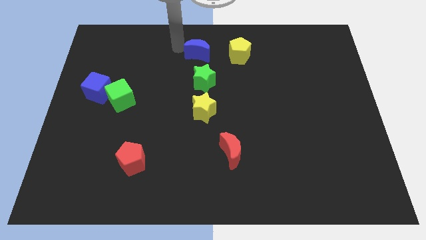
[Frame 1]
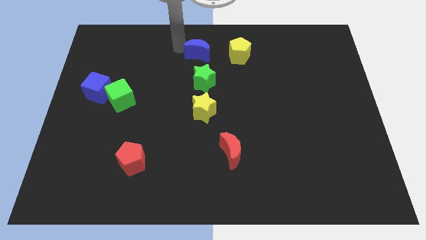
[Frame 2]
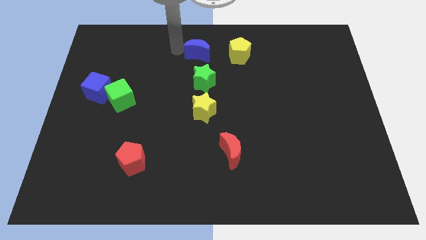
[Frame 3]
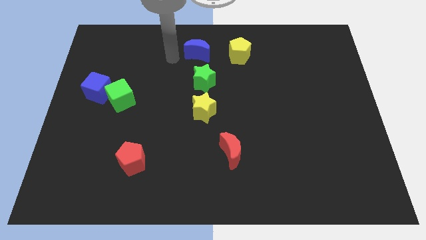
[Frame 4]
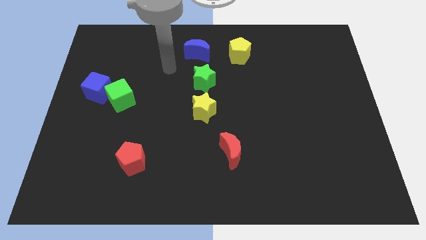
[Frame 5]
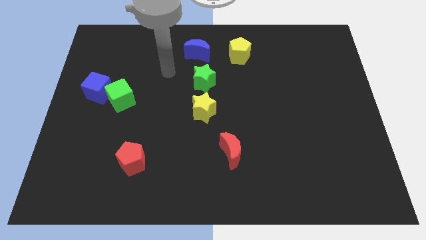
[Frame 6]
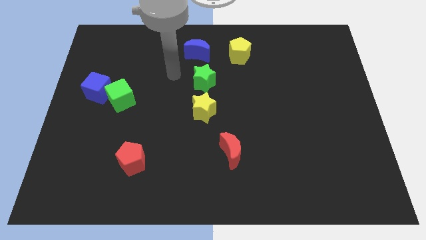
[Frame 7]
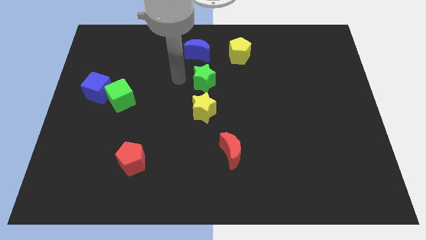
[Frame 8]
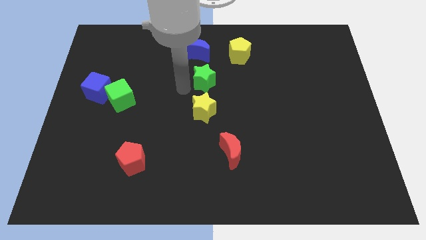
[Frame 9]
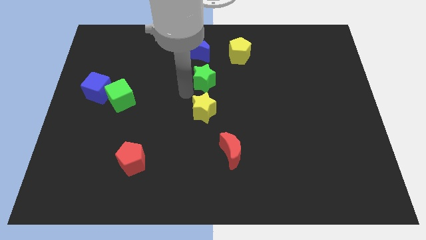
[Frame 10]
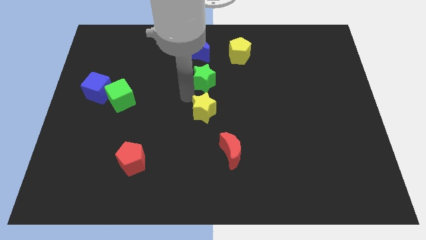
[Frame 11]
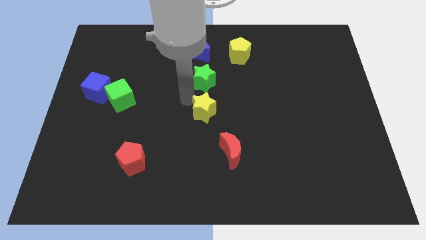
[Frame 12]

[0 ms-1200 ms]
move your arm to the top left of yellow star

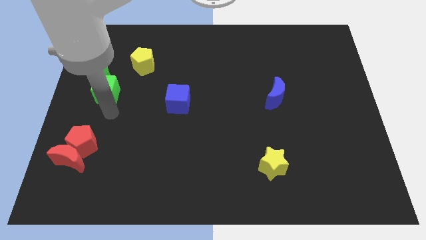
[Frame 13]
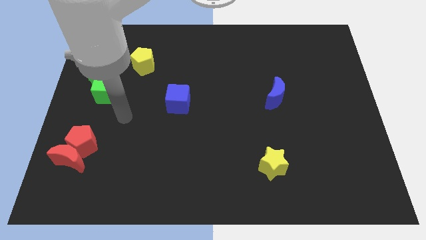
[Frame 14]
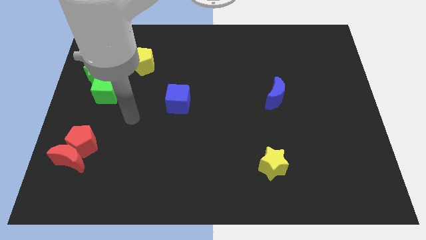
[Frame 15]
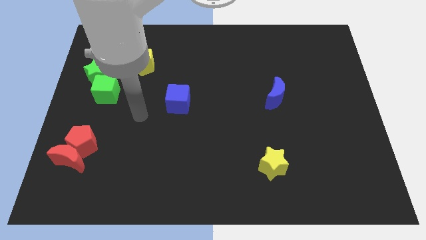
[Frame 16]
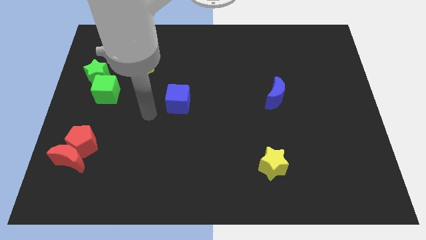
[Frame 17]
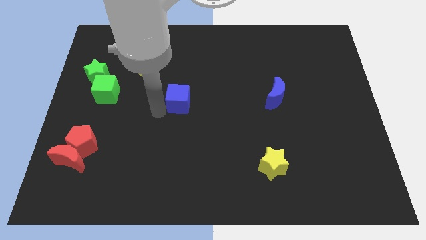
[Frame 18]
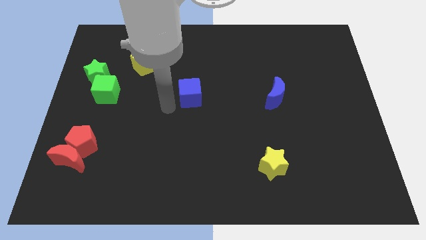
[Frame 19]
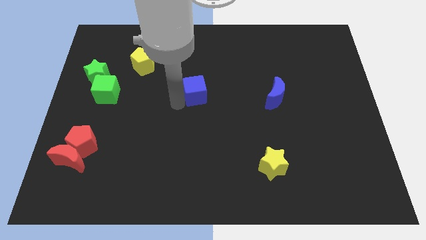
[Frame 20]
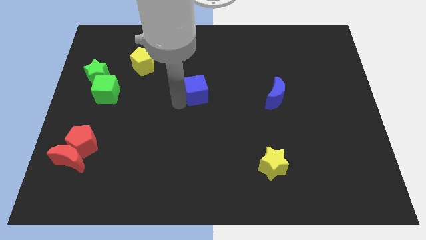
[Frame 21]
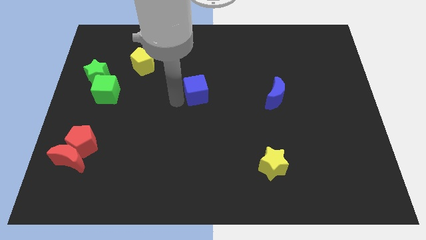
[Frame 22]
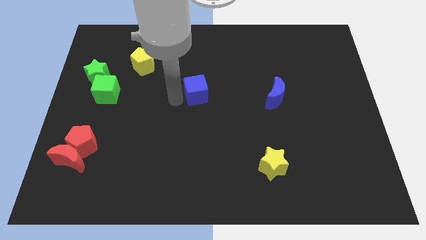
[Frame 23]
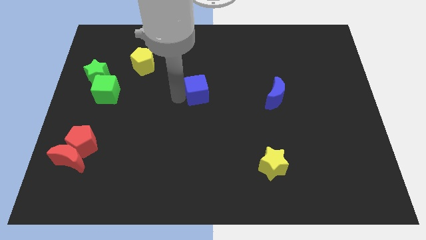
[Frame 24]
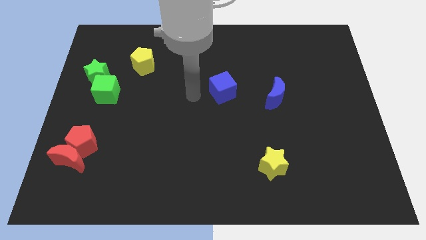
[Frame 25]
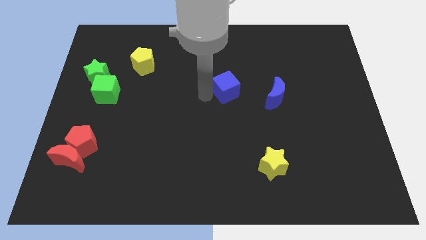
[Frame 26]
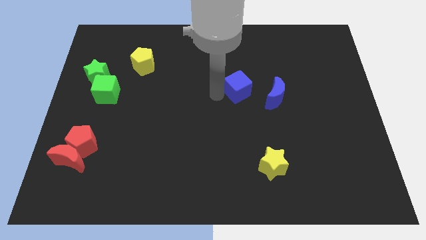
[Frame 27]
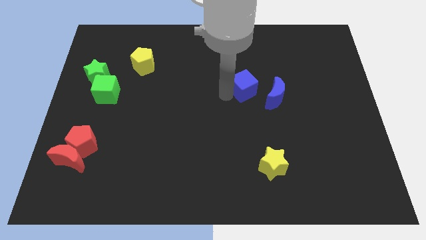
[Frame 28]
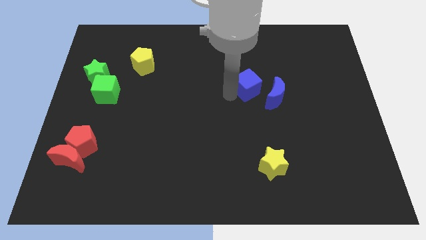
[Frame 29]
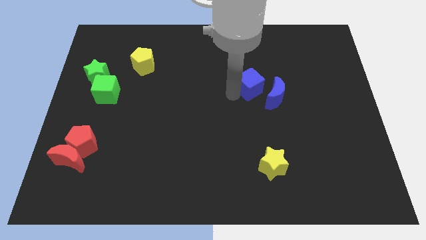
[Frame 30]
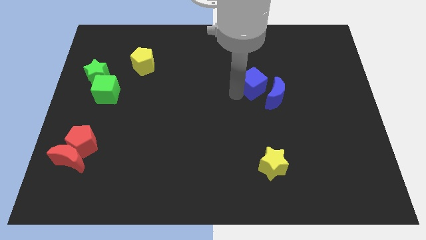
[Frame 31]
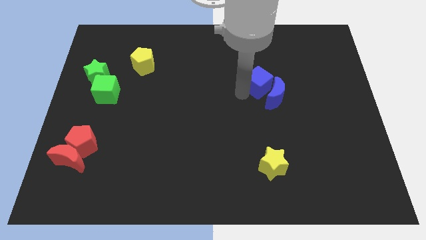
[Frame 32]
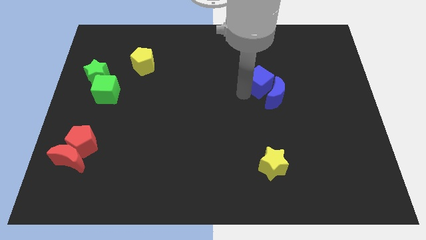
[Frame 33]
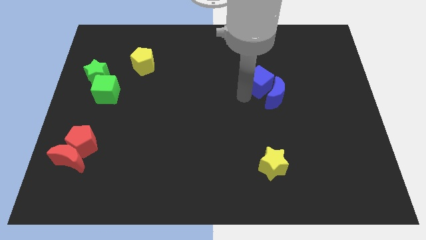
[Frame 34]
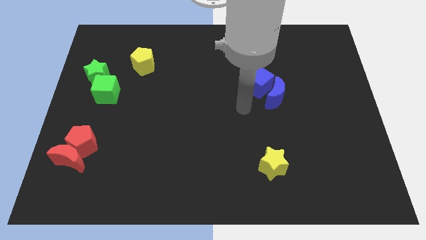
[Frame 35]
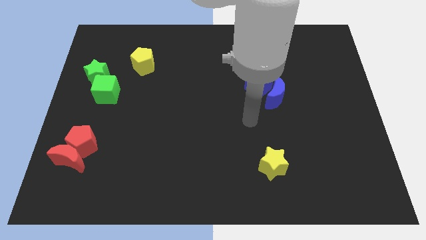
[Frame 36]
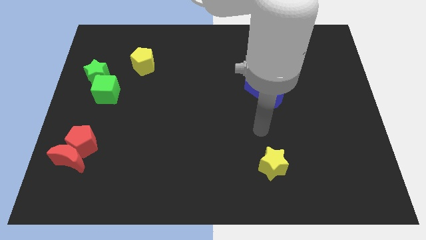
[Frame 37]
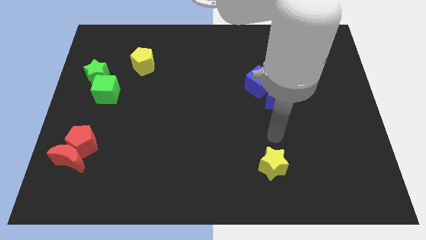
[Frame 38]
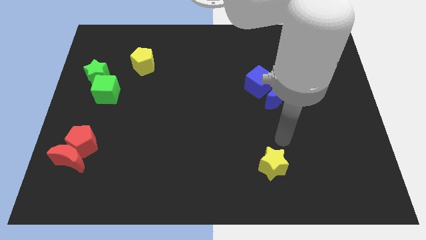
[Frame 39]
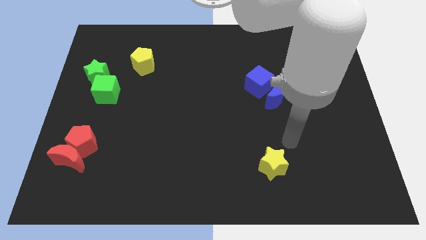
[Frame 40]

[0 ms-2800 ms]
move the blue cube above the blue crescent

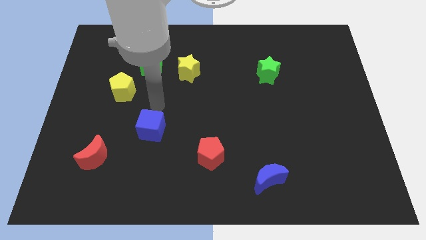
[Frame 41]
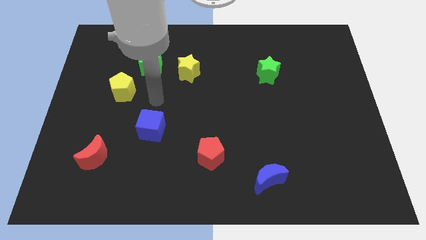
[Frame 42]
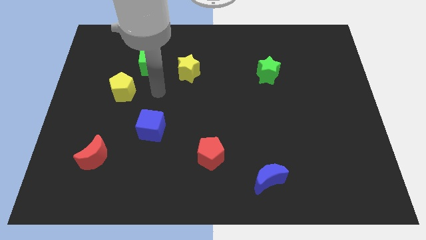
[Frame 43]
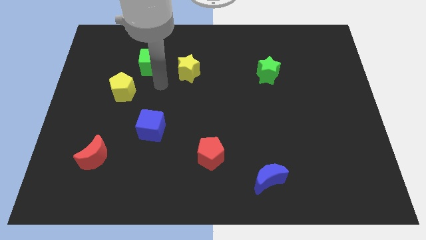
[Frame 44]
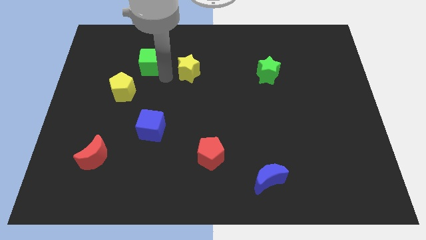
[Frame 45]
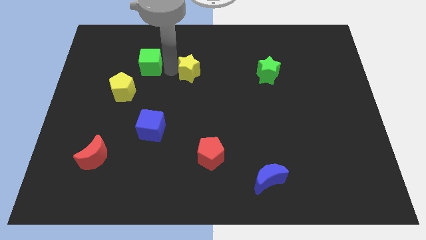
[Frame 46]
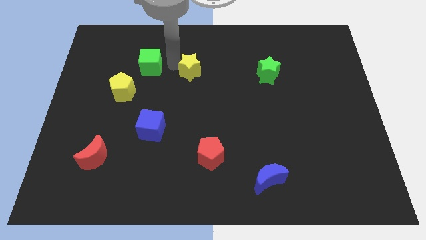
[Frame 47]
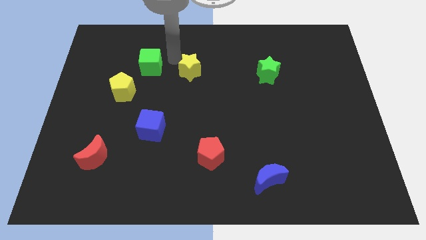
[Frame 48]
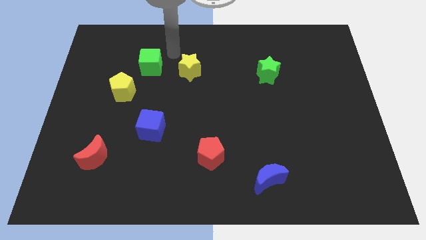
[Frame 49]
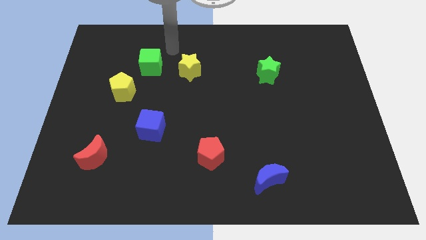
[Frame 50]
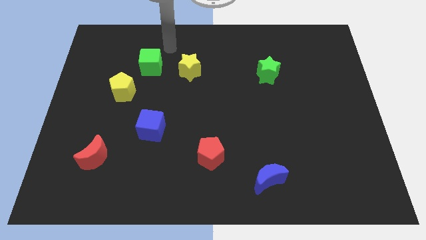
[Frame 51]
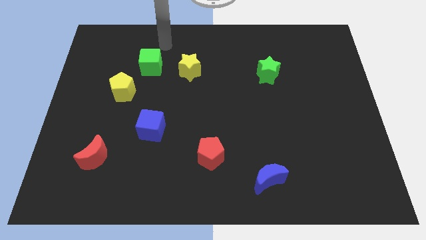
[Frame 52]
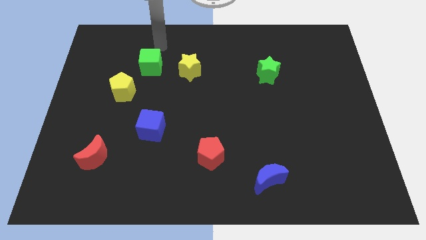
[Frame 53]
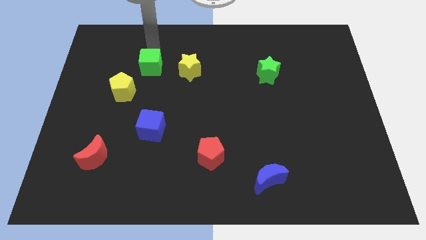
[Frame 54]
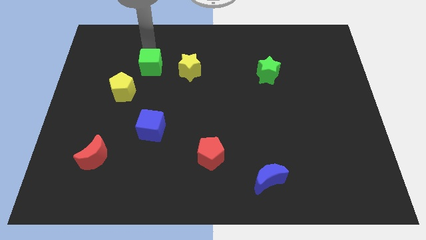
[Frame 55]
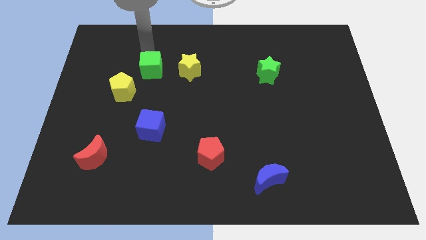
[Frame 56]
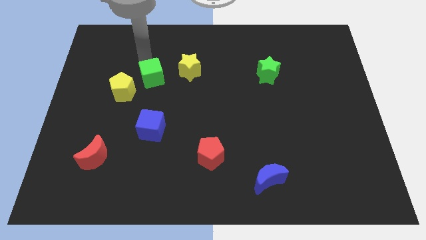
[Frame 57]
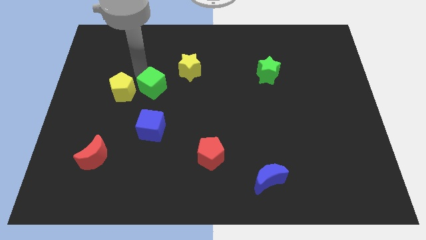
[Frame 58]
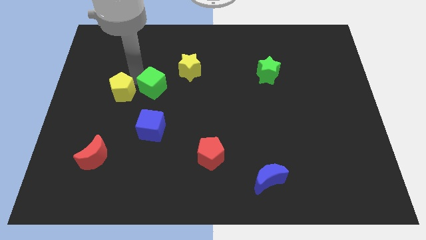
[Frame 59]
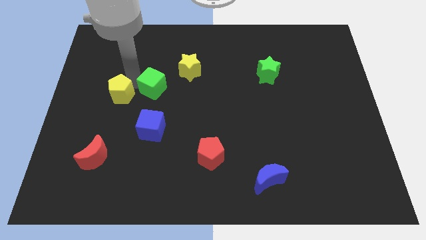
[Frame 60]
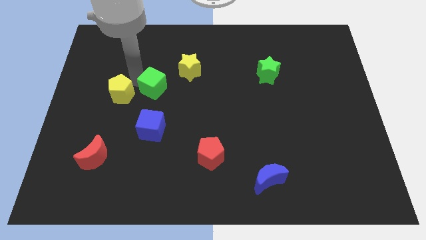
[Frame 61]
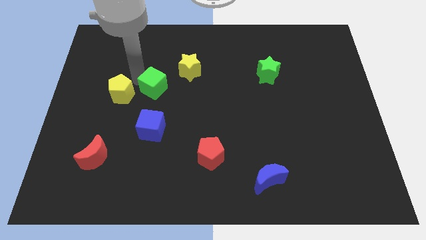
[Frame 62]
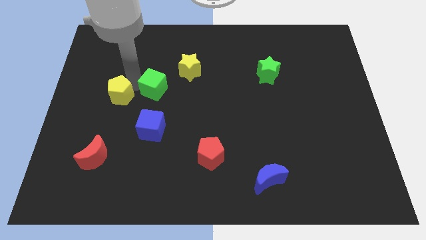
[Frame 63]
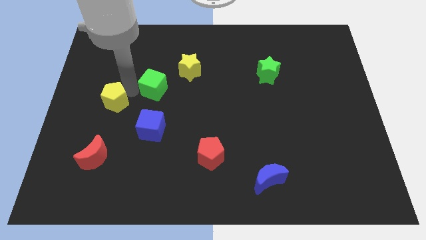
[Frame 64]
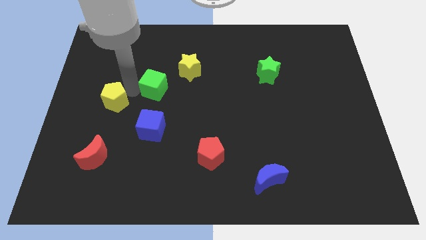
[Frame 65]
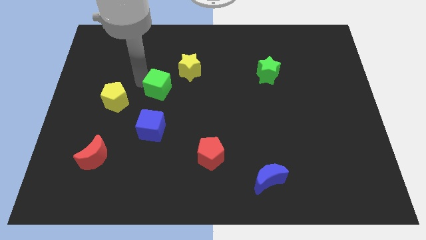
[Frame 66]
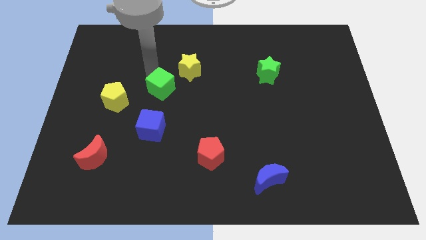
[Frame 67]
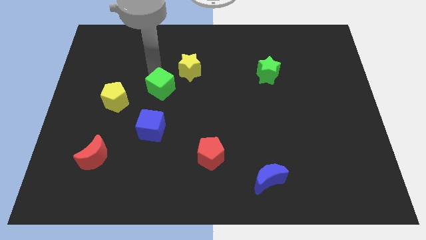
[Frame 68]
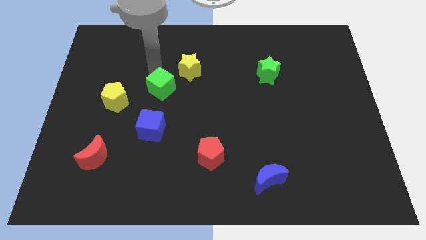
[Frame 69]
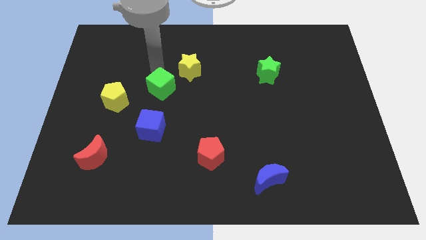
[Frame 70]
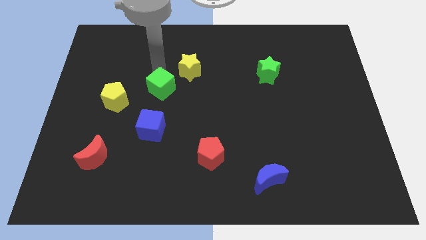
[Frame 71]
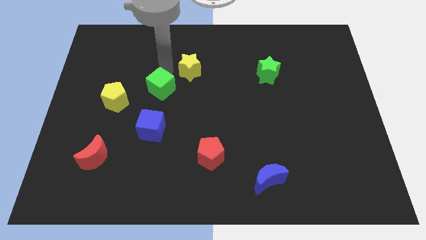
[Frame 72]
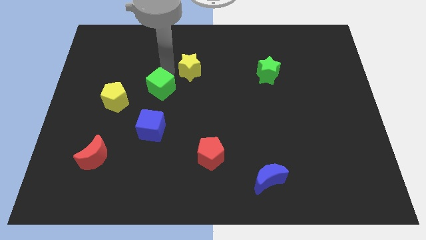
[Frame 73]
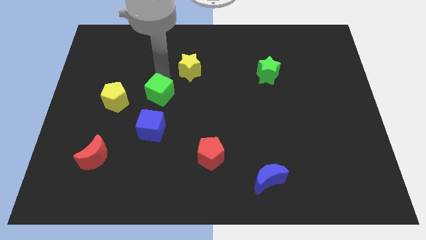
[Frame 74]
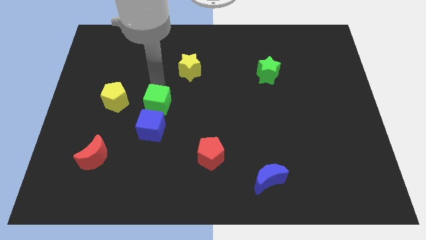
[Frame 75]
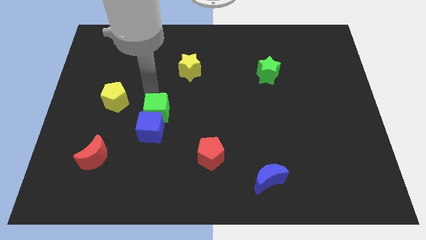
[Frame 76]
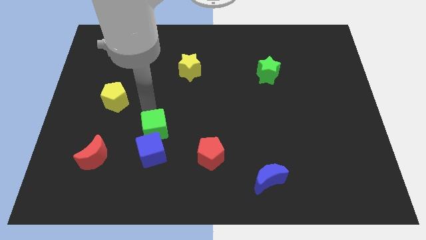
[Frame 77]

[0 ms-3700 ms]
move the green cube above the blue cube

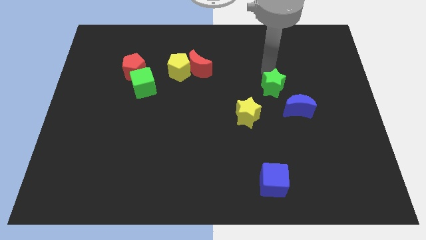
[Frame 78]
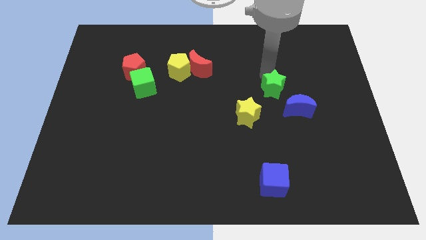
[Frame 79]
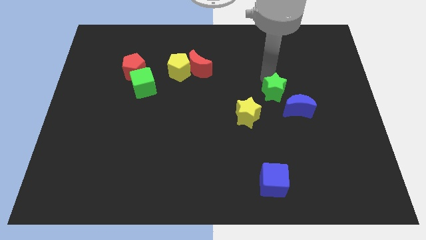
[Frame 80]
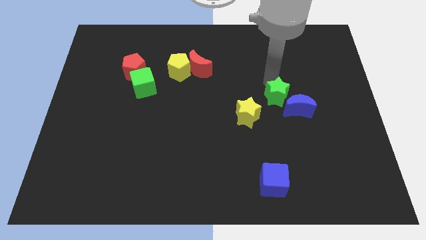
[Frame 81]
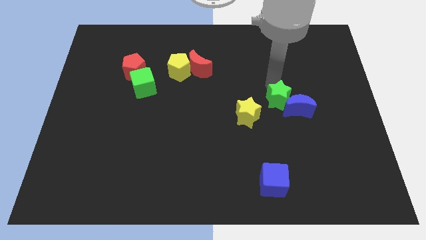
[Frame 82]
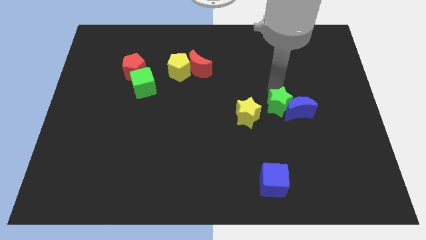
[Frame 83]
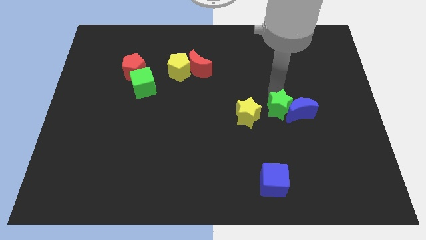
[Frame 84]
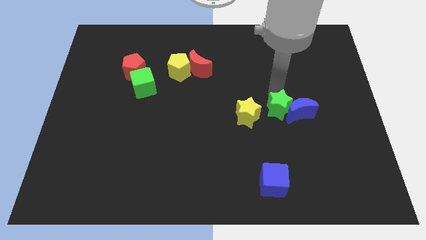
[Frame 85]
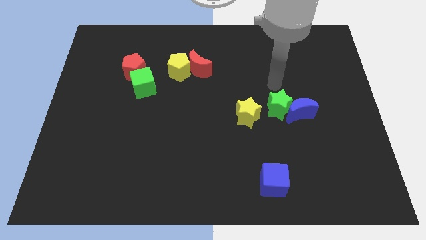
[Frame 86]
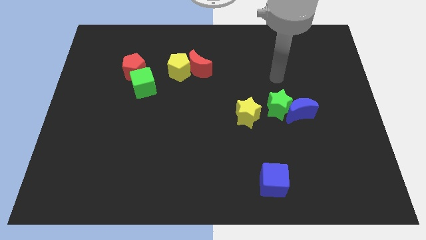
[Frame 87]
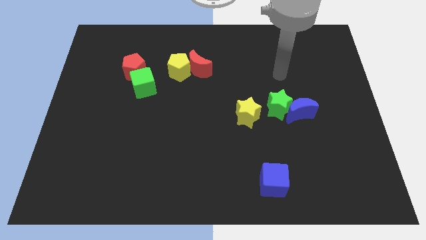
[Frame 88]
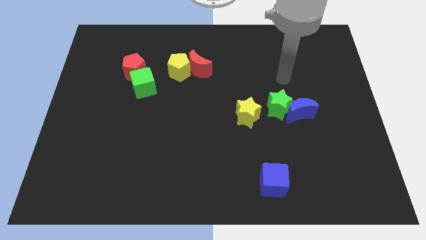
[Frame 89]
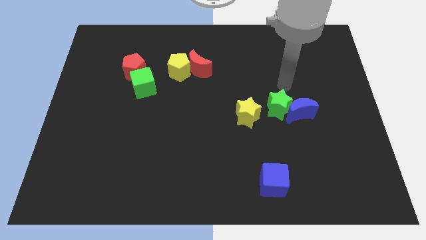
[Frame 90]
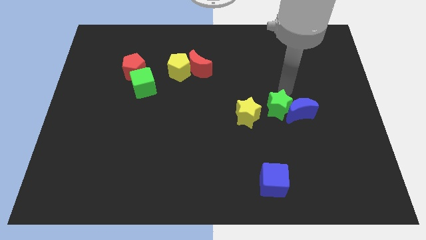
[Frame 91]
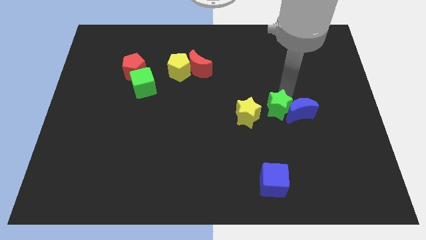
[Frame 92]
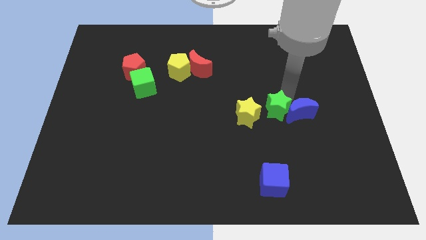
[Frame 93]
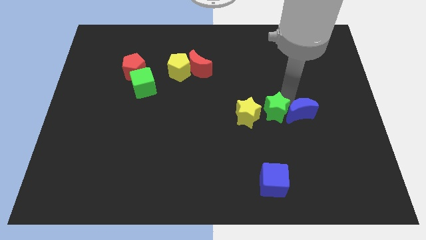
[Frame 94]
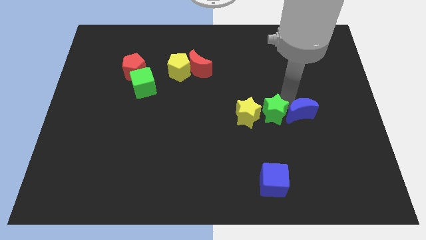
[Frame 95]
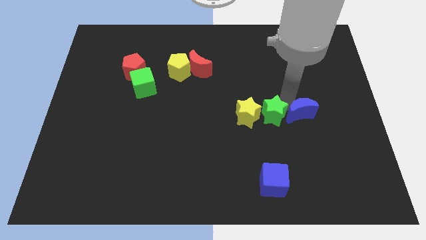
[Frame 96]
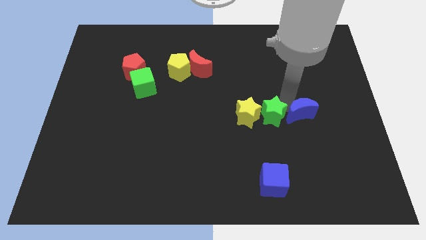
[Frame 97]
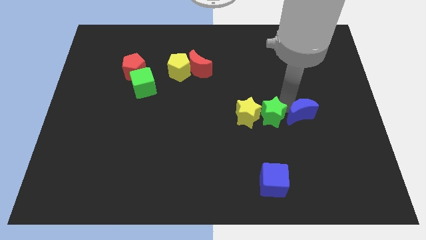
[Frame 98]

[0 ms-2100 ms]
place the green star to the right of the yellow star
